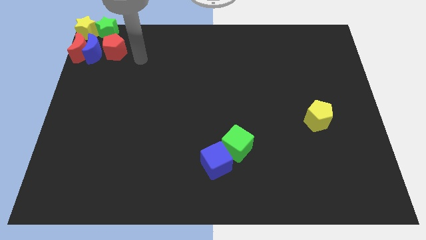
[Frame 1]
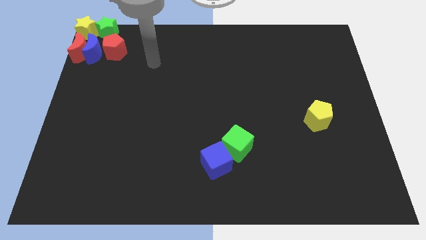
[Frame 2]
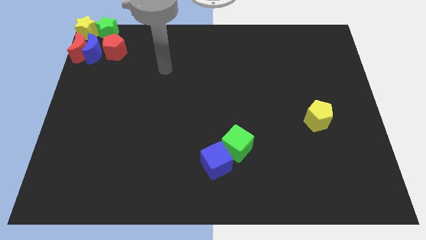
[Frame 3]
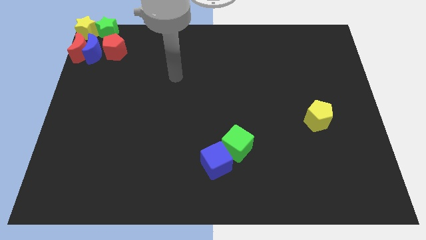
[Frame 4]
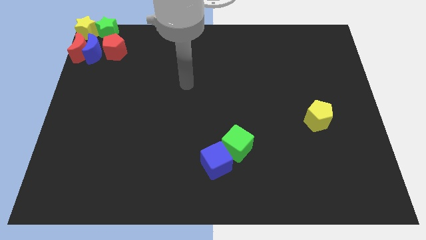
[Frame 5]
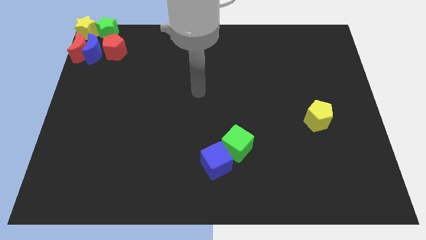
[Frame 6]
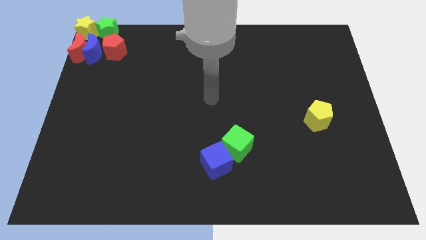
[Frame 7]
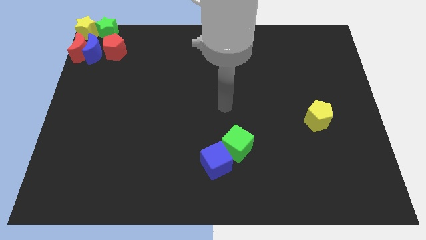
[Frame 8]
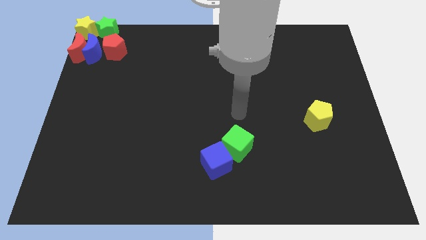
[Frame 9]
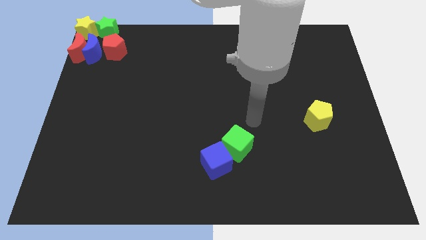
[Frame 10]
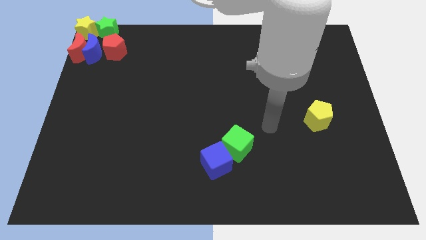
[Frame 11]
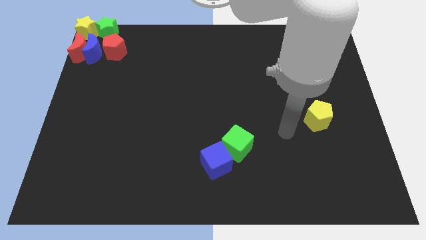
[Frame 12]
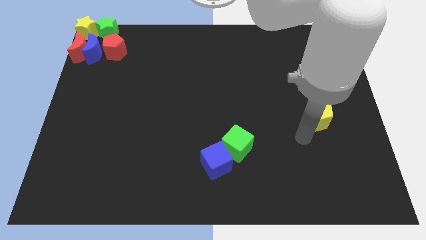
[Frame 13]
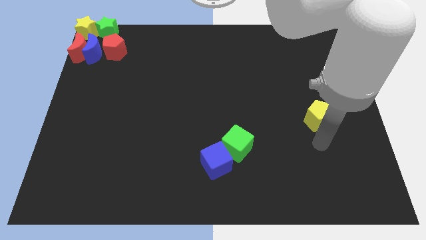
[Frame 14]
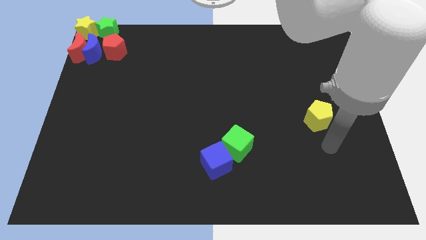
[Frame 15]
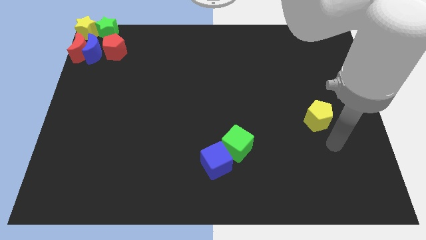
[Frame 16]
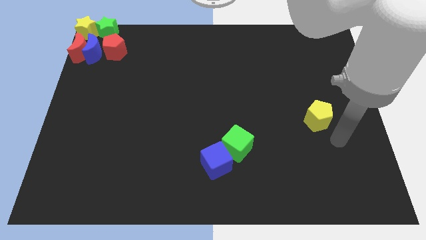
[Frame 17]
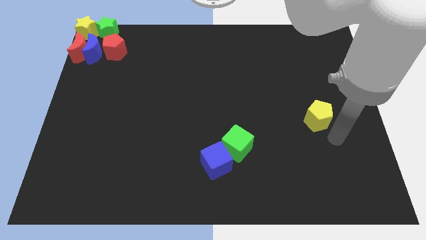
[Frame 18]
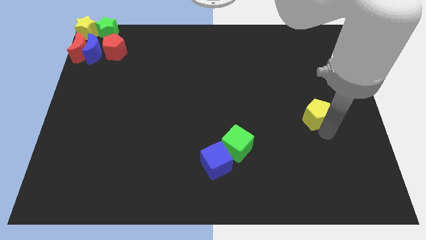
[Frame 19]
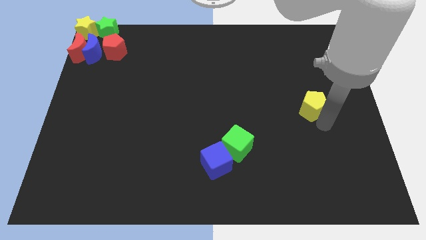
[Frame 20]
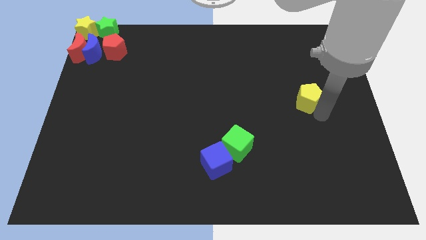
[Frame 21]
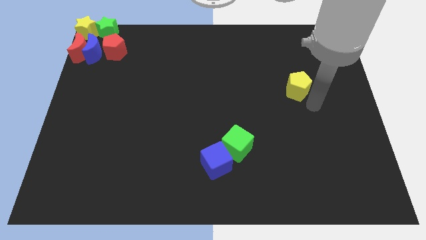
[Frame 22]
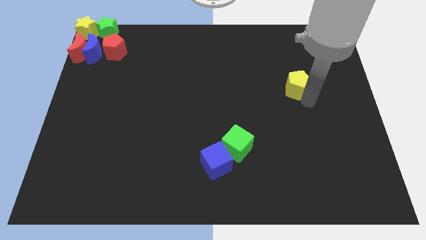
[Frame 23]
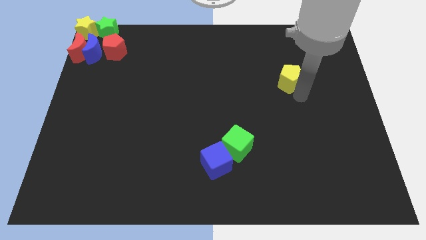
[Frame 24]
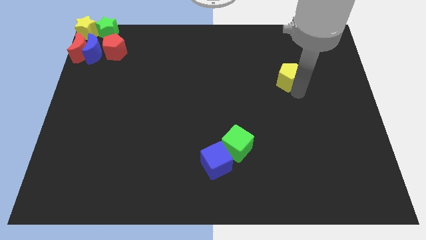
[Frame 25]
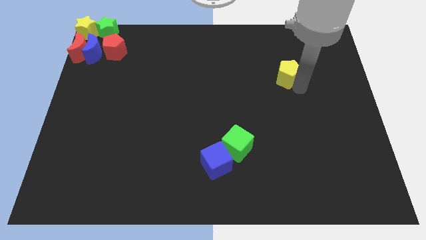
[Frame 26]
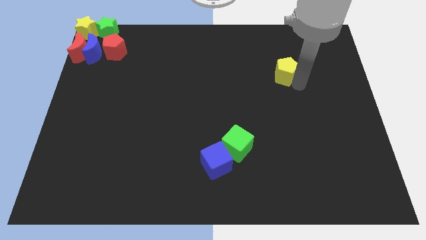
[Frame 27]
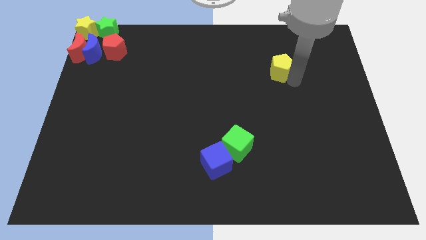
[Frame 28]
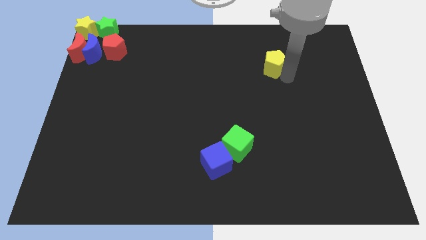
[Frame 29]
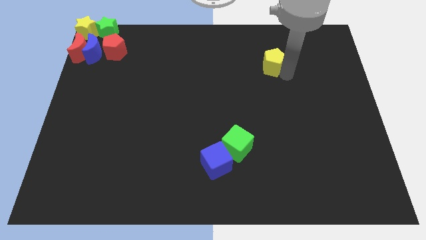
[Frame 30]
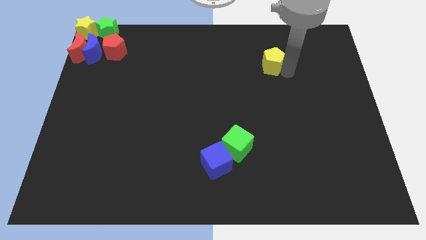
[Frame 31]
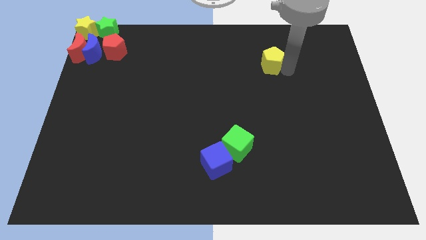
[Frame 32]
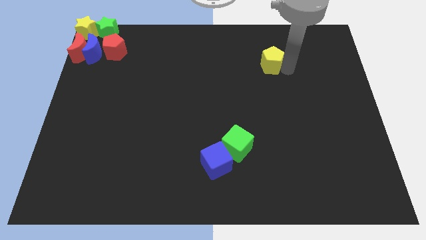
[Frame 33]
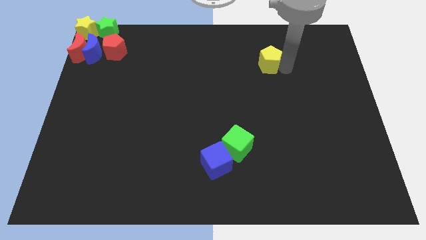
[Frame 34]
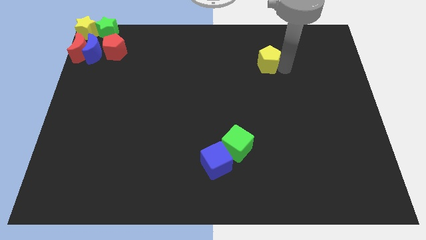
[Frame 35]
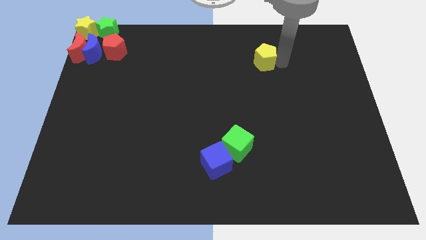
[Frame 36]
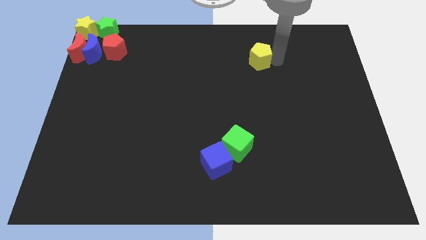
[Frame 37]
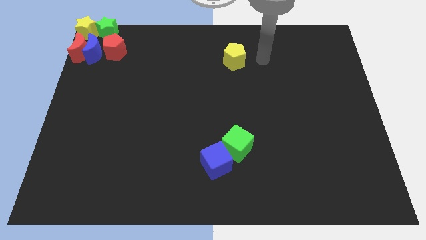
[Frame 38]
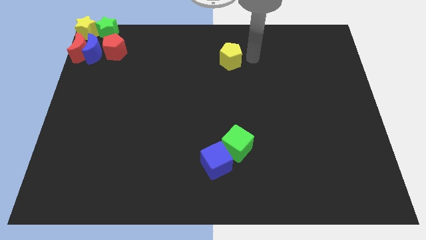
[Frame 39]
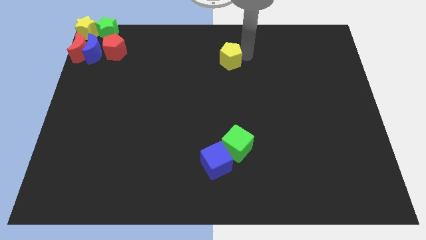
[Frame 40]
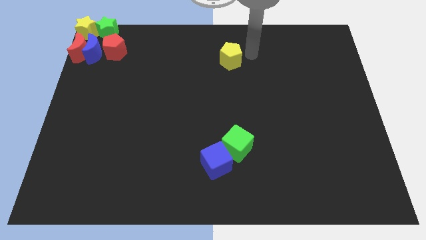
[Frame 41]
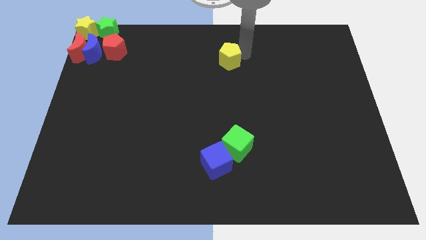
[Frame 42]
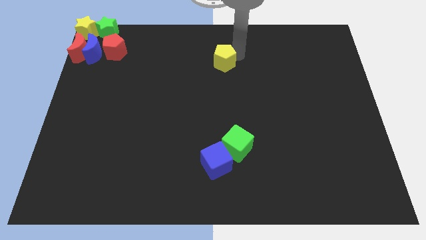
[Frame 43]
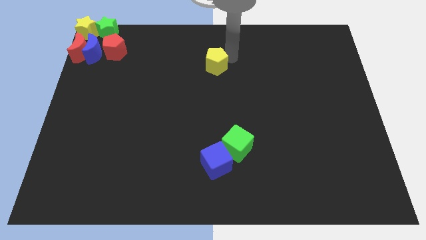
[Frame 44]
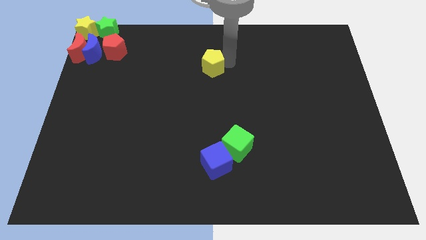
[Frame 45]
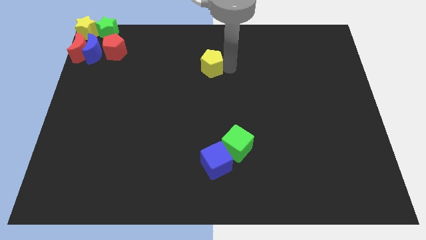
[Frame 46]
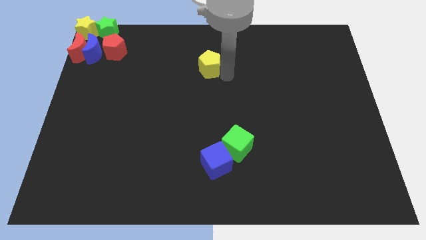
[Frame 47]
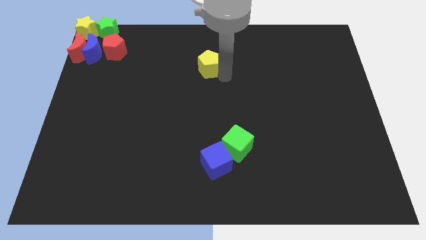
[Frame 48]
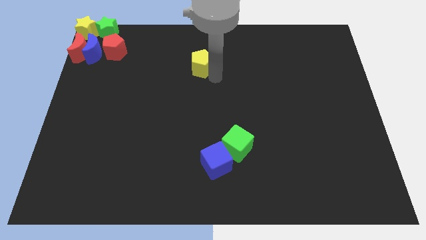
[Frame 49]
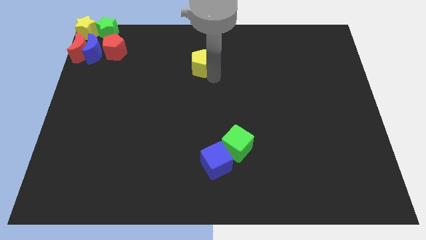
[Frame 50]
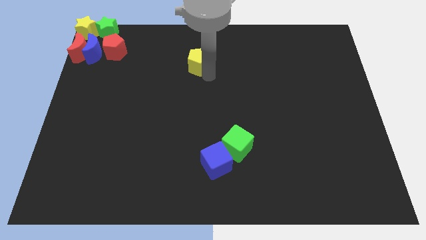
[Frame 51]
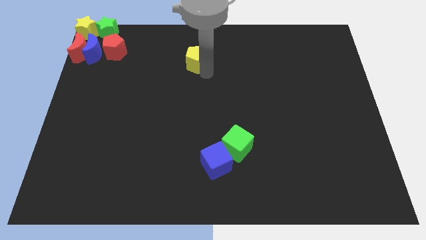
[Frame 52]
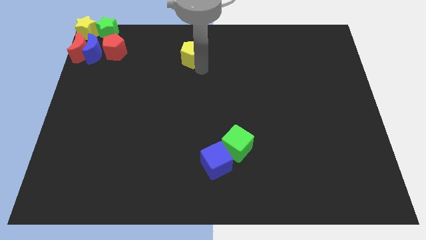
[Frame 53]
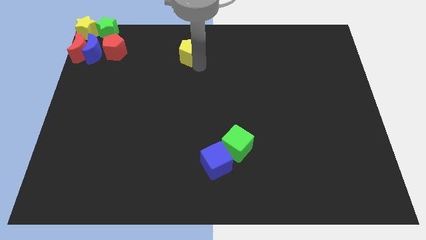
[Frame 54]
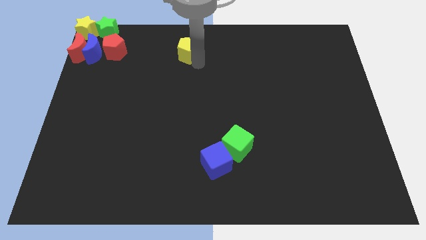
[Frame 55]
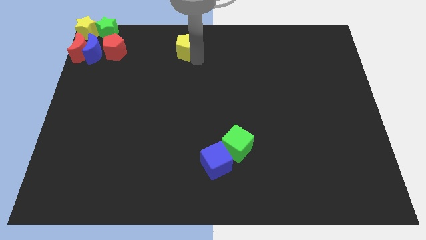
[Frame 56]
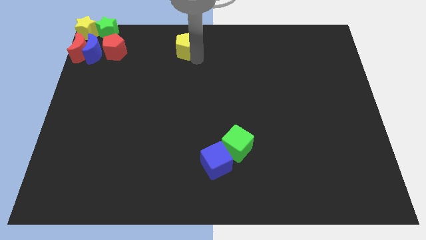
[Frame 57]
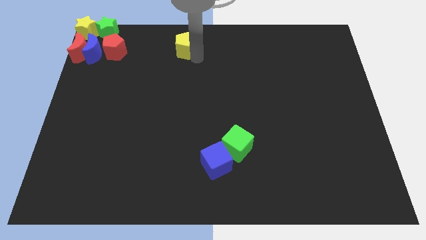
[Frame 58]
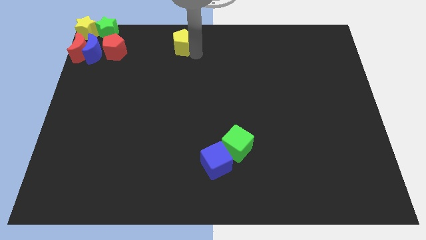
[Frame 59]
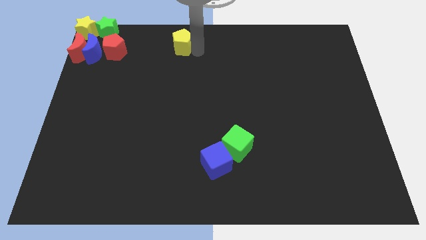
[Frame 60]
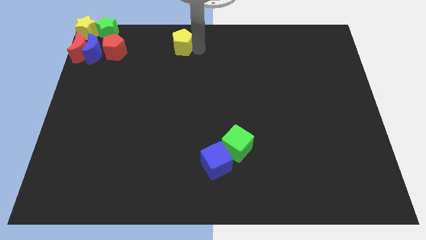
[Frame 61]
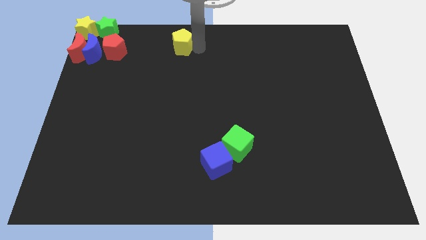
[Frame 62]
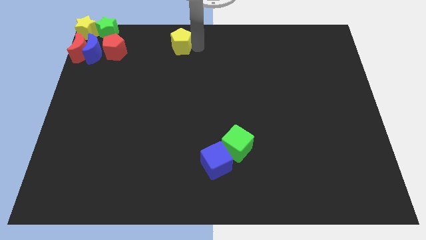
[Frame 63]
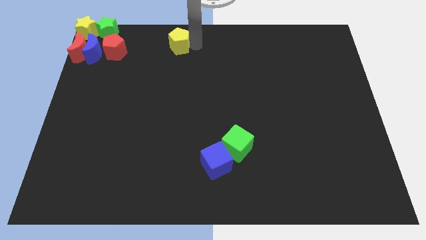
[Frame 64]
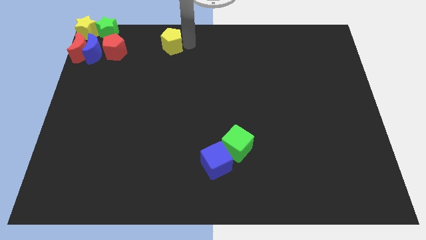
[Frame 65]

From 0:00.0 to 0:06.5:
move the yellow pentagon towards the right side of the group of blocks

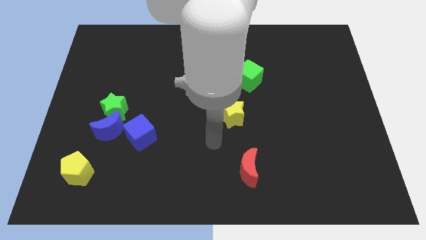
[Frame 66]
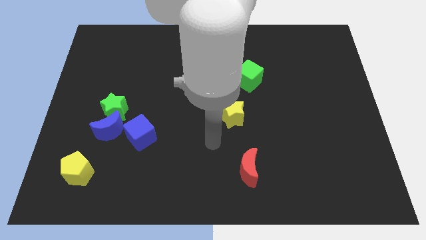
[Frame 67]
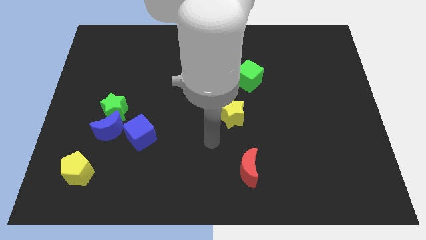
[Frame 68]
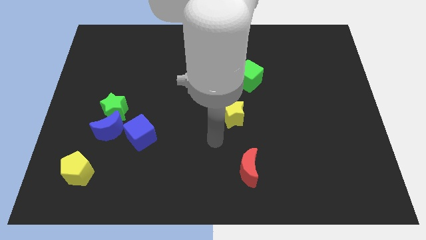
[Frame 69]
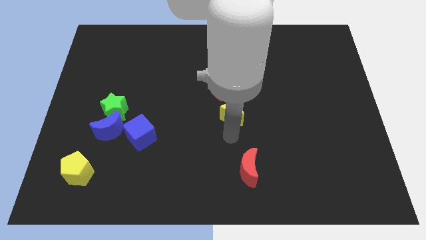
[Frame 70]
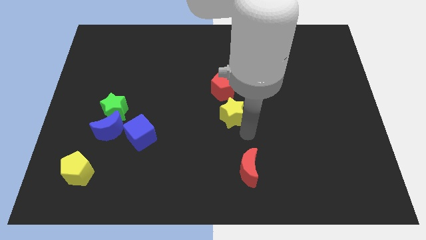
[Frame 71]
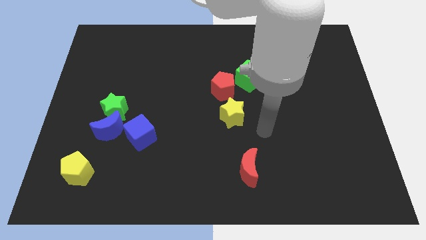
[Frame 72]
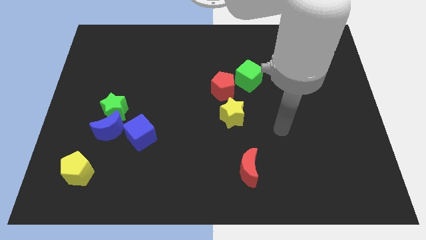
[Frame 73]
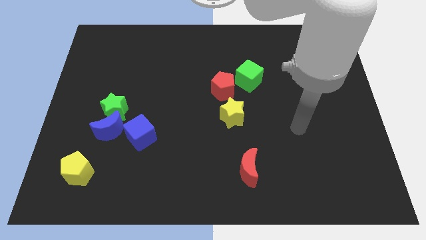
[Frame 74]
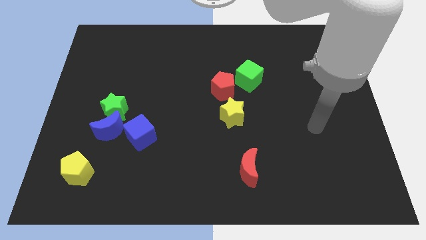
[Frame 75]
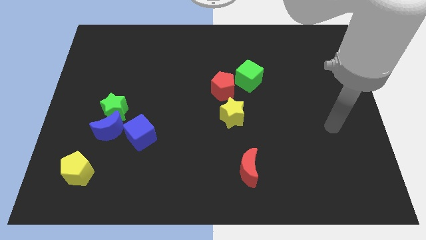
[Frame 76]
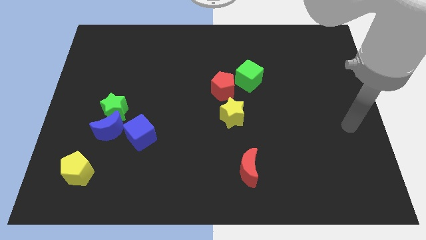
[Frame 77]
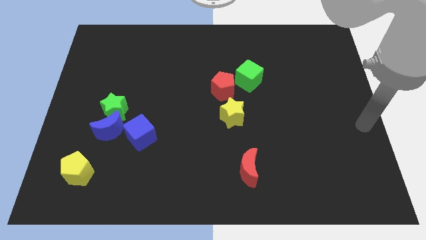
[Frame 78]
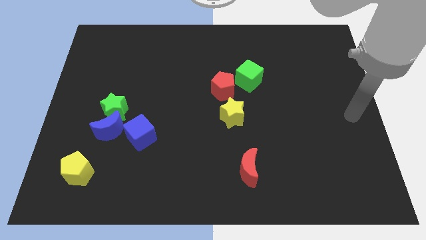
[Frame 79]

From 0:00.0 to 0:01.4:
move your arm right center of the board

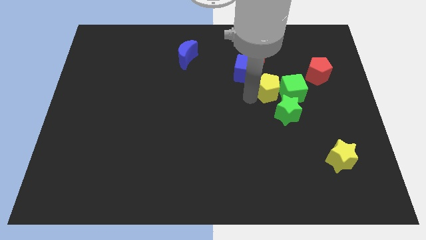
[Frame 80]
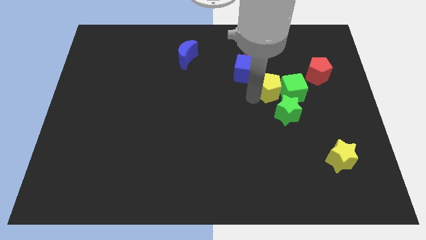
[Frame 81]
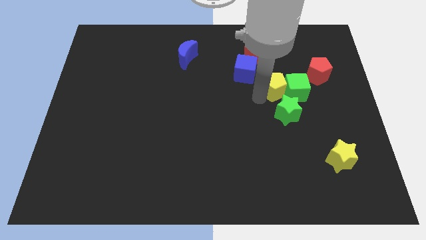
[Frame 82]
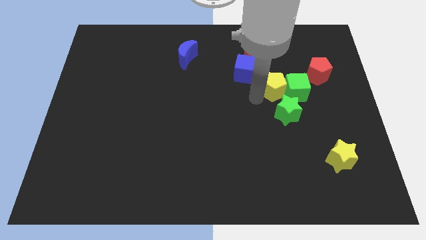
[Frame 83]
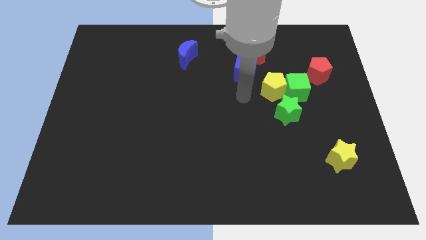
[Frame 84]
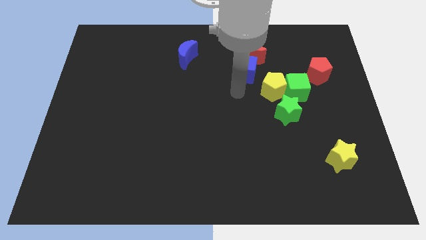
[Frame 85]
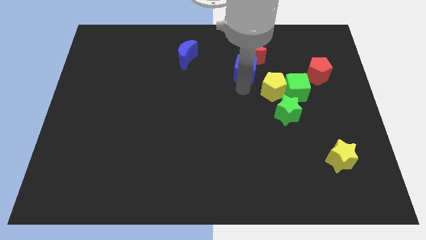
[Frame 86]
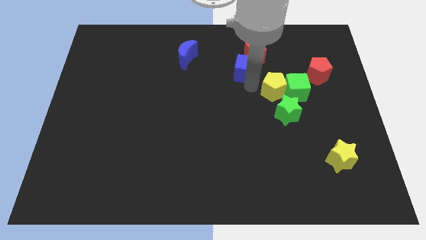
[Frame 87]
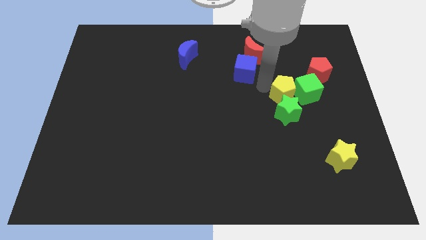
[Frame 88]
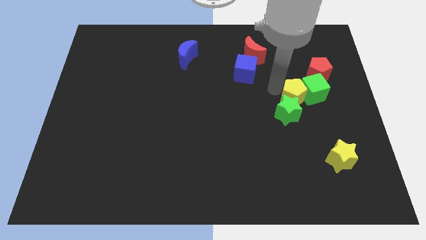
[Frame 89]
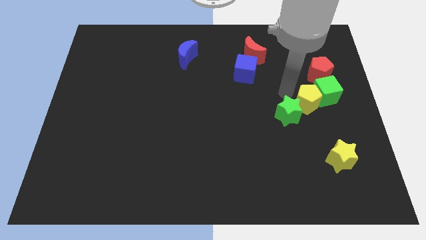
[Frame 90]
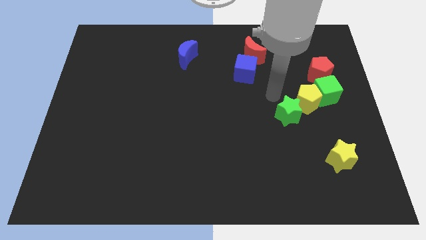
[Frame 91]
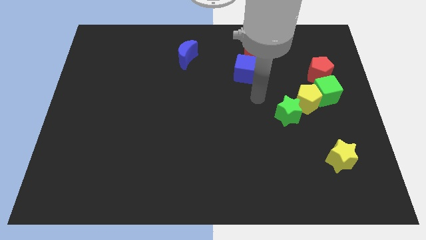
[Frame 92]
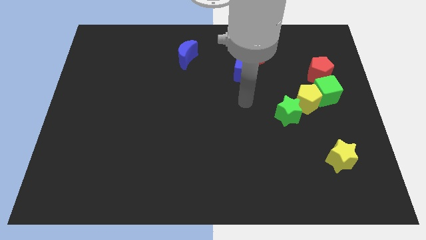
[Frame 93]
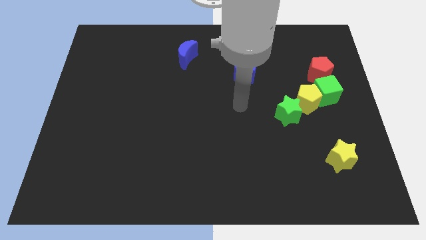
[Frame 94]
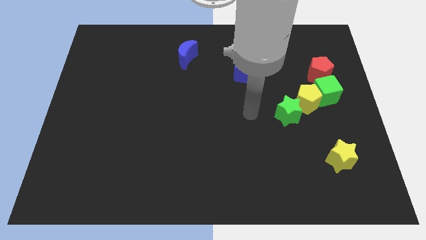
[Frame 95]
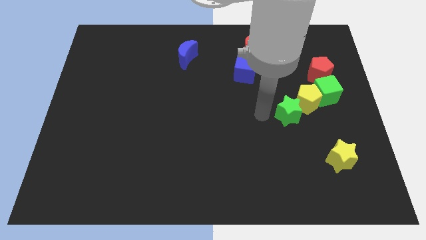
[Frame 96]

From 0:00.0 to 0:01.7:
put the yellow pentagon and green cube to the top right side of the green star
